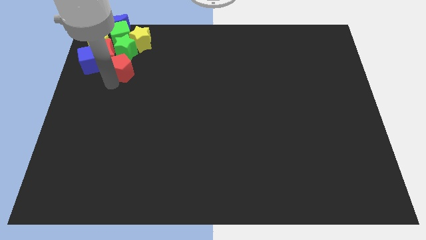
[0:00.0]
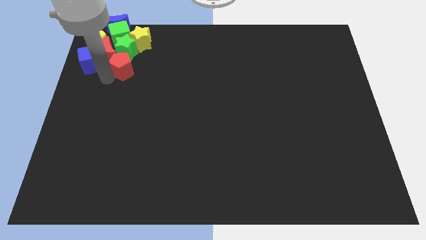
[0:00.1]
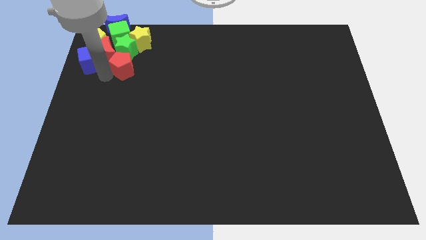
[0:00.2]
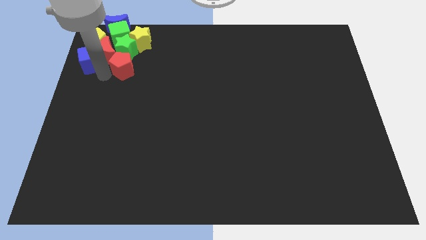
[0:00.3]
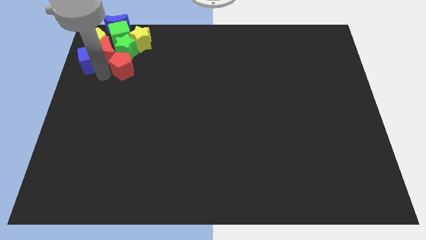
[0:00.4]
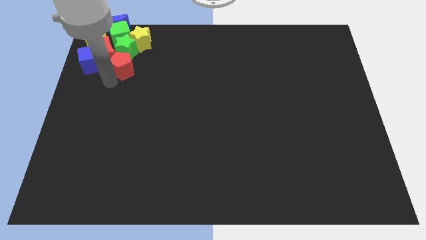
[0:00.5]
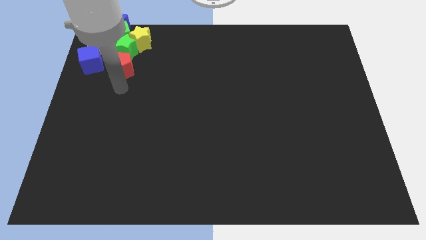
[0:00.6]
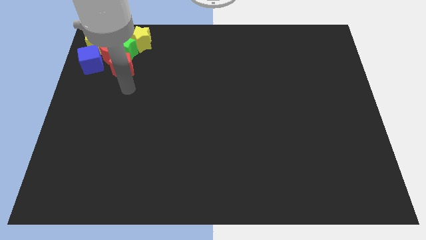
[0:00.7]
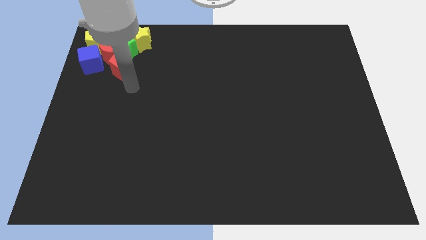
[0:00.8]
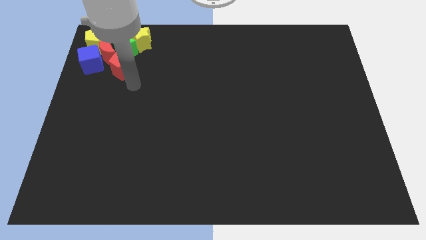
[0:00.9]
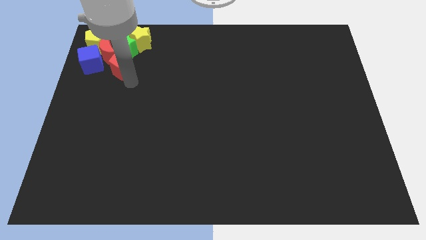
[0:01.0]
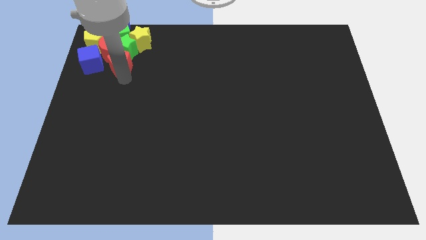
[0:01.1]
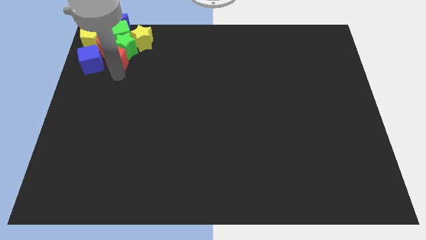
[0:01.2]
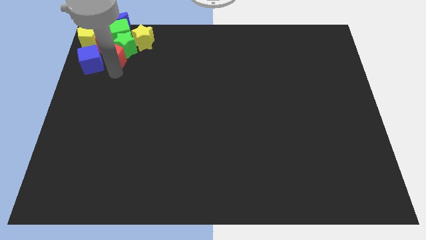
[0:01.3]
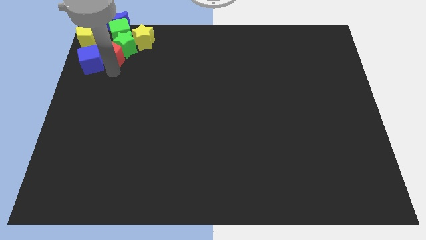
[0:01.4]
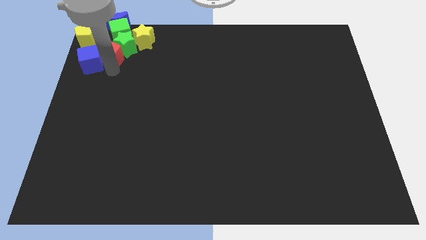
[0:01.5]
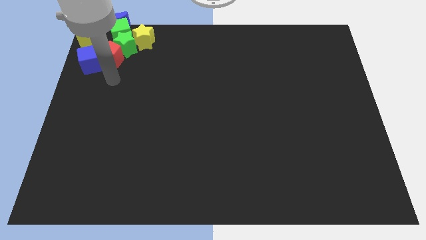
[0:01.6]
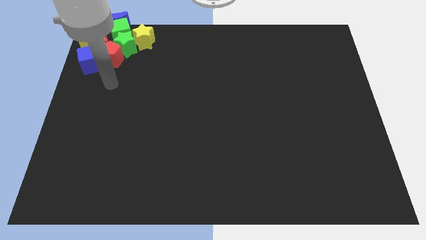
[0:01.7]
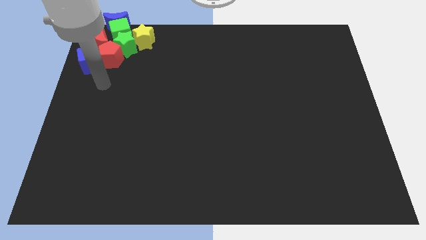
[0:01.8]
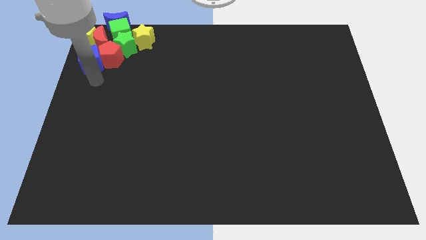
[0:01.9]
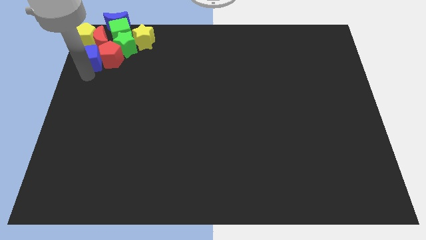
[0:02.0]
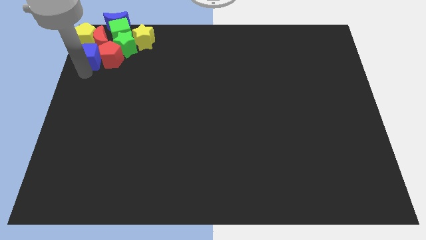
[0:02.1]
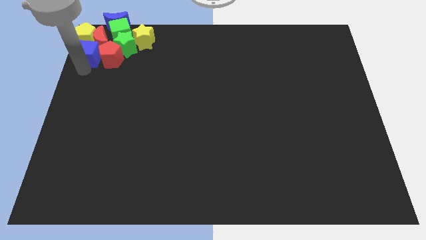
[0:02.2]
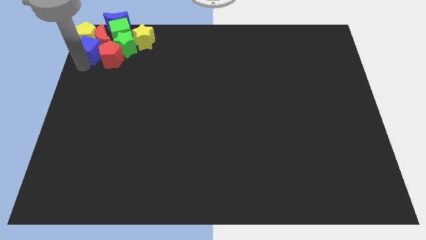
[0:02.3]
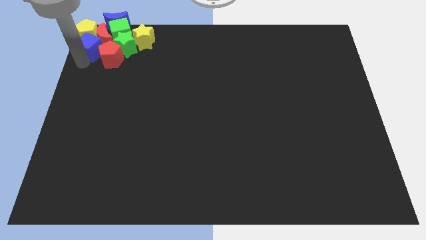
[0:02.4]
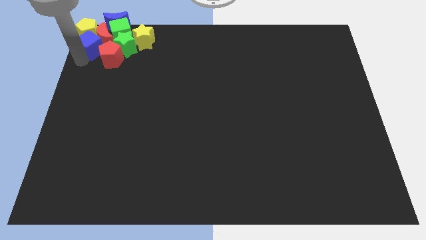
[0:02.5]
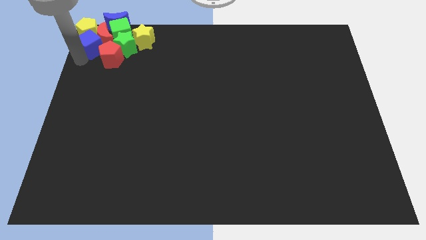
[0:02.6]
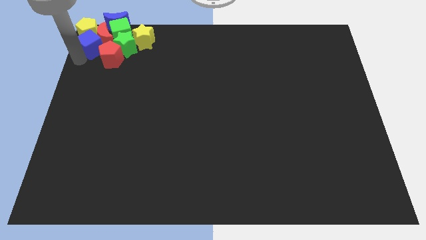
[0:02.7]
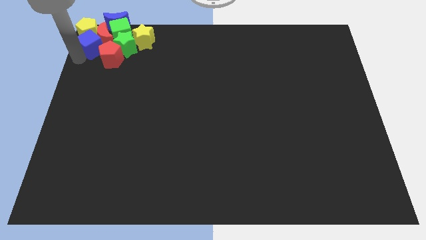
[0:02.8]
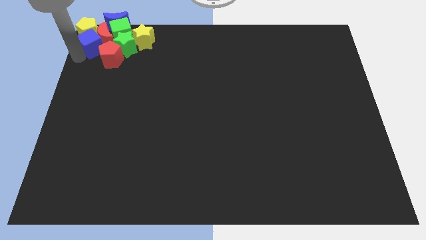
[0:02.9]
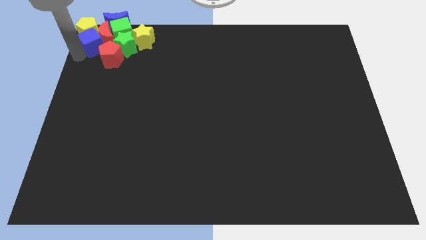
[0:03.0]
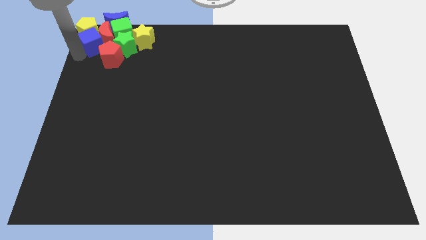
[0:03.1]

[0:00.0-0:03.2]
push the blue cube into the yellow pentagon

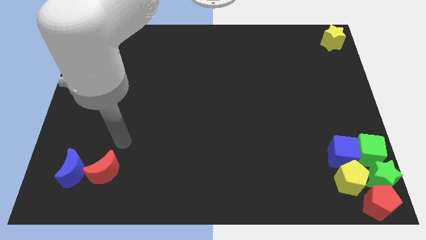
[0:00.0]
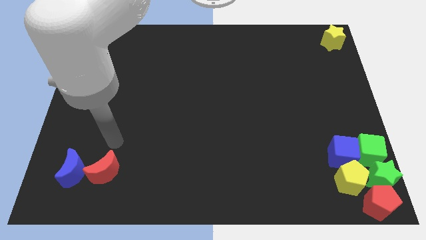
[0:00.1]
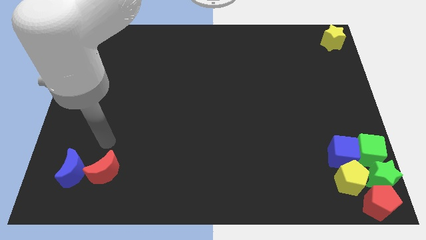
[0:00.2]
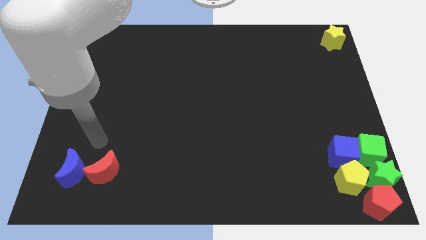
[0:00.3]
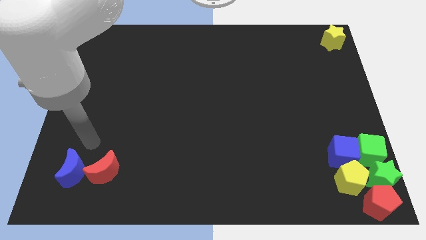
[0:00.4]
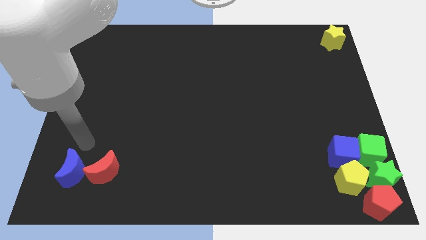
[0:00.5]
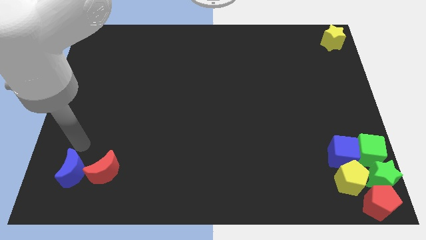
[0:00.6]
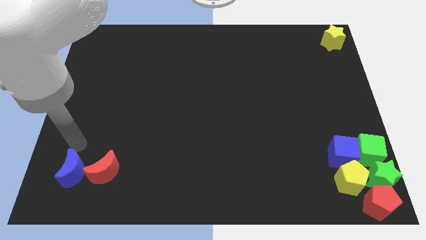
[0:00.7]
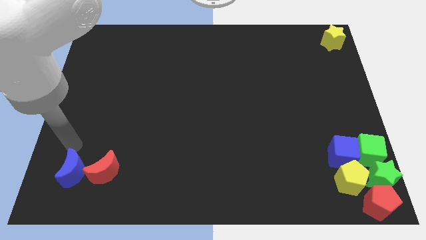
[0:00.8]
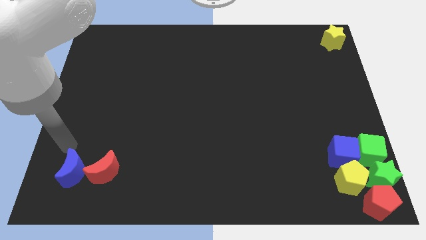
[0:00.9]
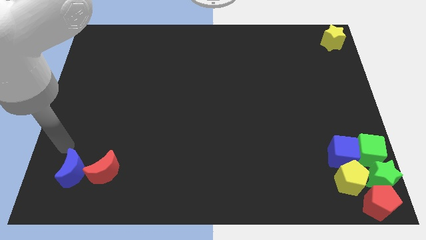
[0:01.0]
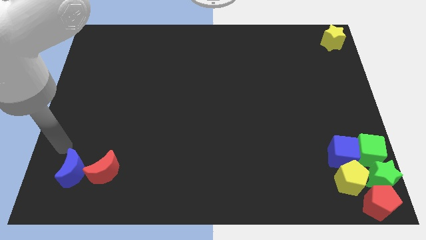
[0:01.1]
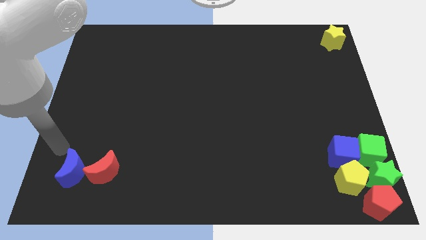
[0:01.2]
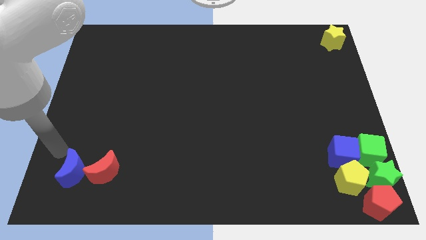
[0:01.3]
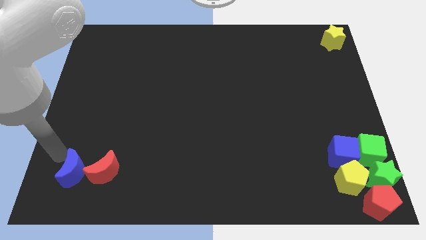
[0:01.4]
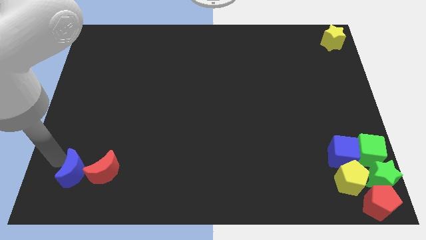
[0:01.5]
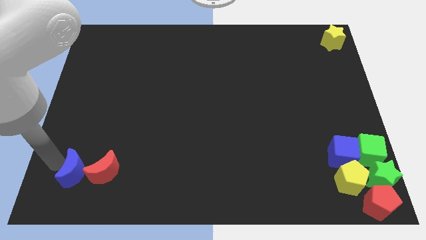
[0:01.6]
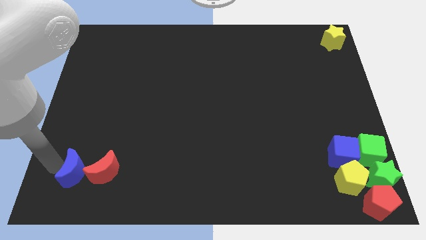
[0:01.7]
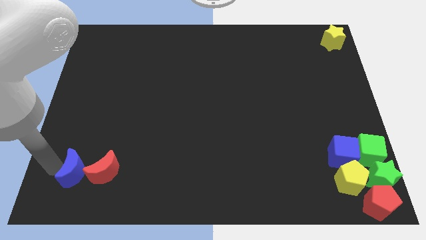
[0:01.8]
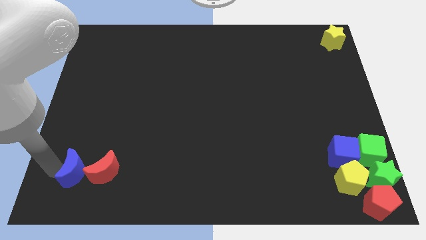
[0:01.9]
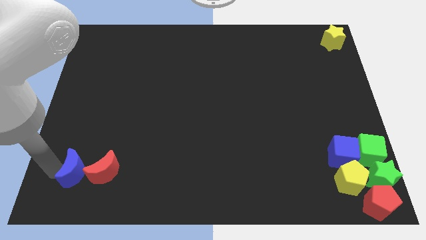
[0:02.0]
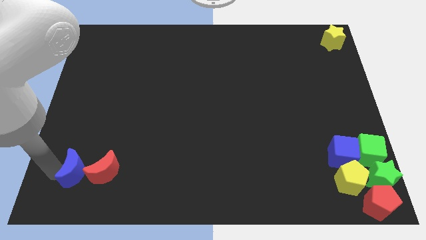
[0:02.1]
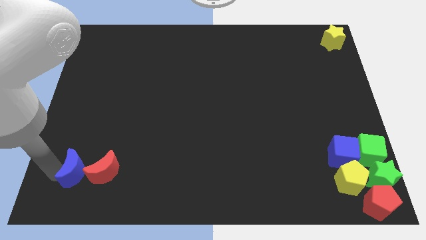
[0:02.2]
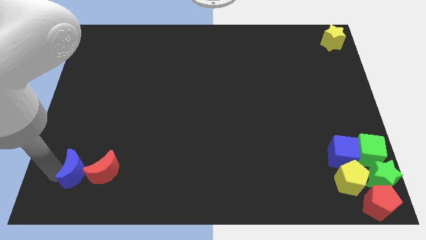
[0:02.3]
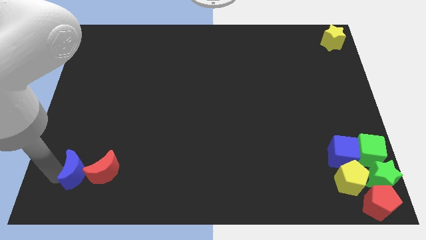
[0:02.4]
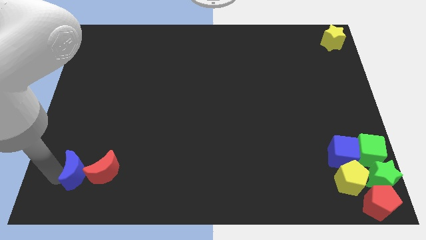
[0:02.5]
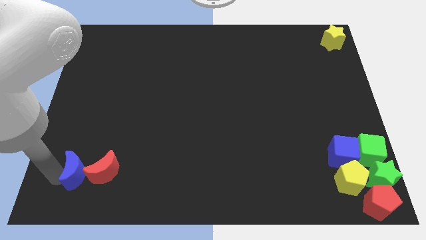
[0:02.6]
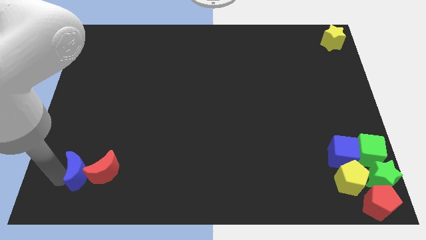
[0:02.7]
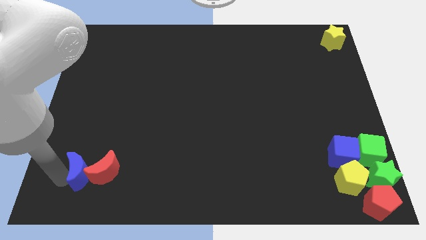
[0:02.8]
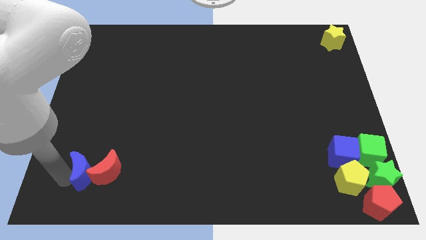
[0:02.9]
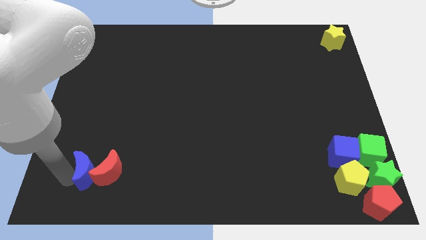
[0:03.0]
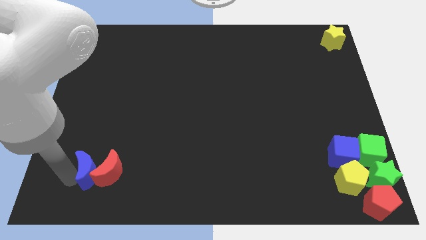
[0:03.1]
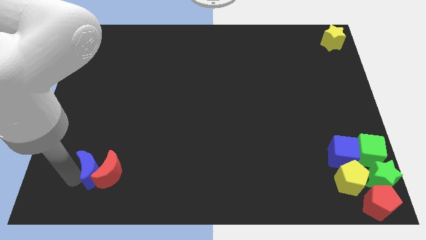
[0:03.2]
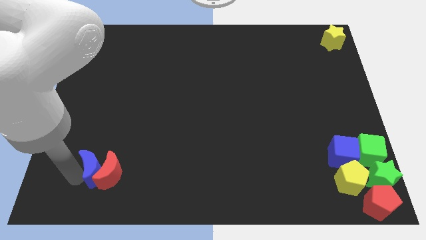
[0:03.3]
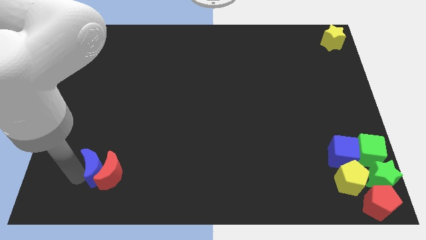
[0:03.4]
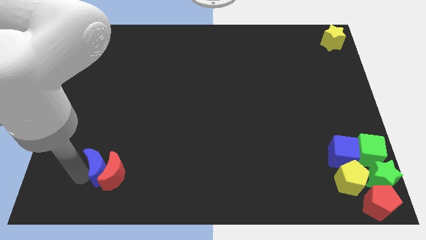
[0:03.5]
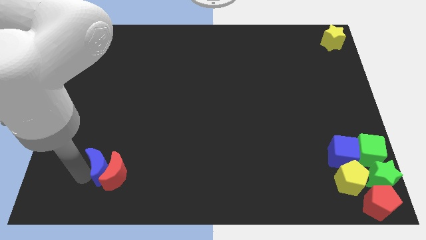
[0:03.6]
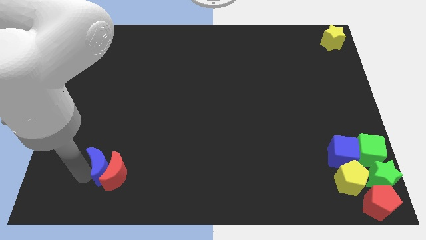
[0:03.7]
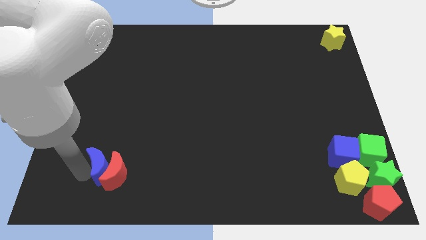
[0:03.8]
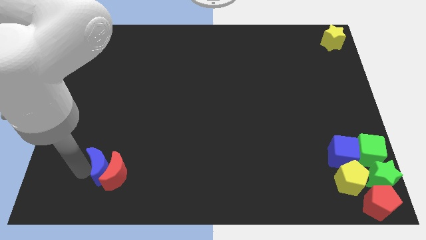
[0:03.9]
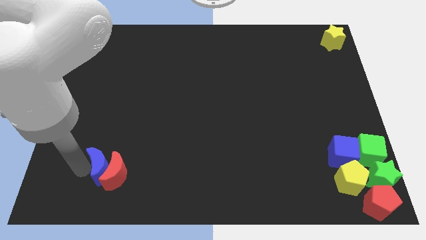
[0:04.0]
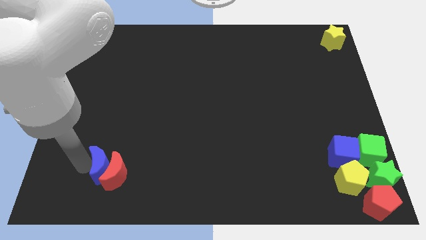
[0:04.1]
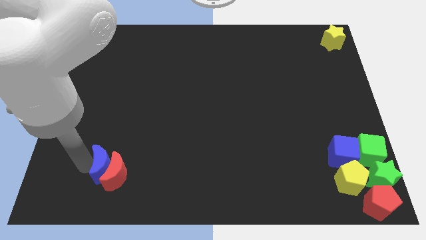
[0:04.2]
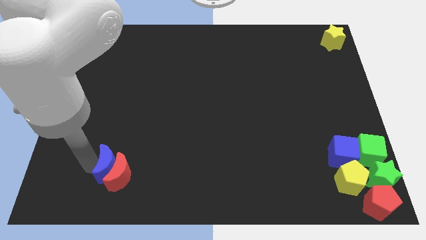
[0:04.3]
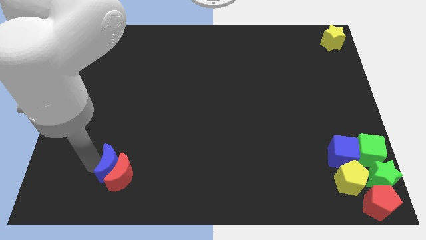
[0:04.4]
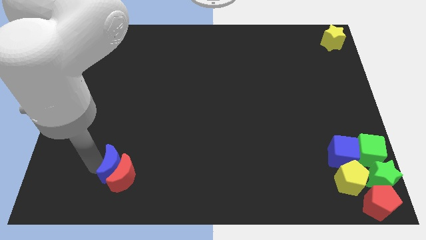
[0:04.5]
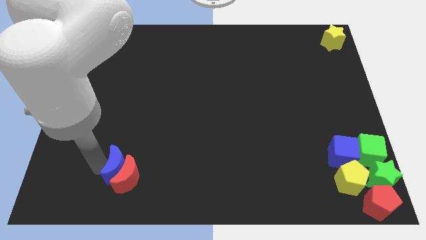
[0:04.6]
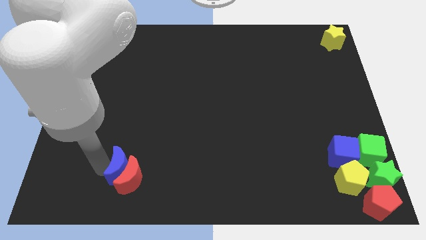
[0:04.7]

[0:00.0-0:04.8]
push the blue moon into red moon to the left

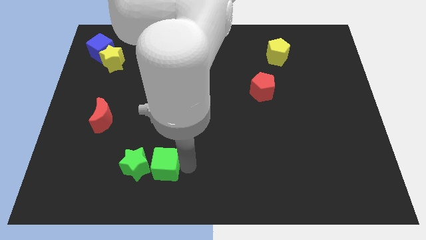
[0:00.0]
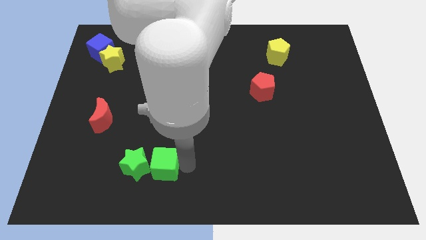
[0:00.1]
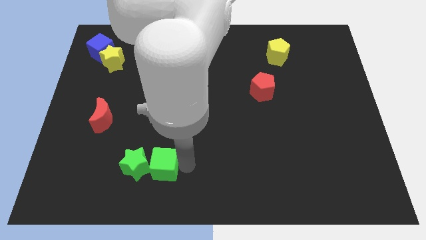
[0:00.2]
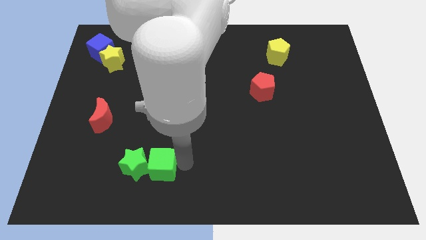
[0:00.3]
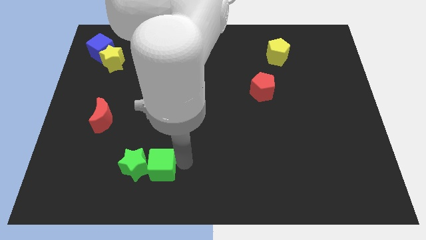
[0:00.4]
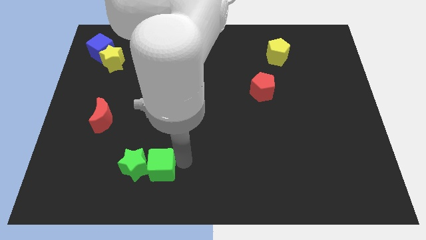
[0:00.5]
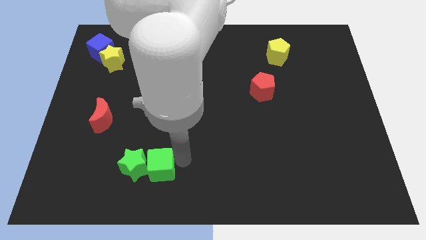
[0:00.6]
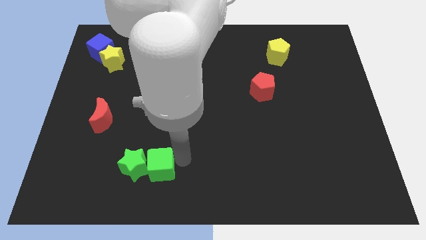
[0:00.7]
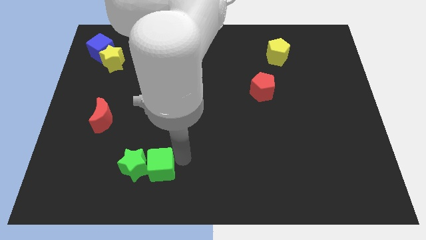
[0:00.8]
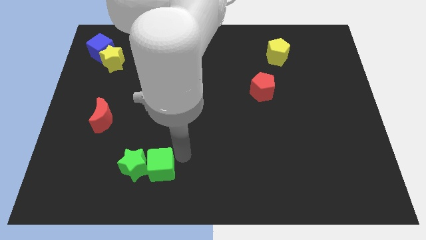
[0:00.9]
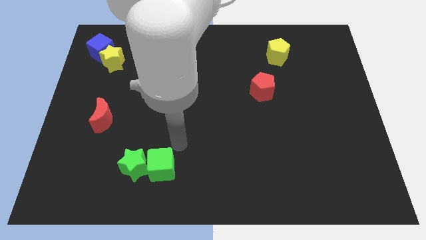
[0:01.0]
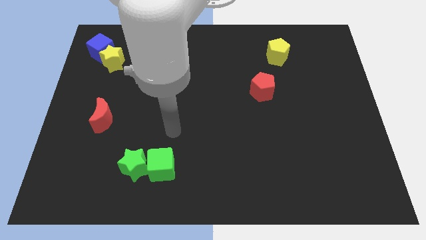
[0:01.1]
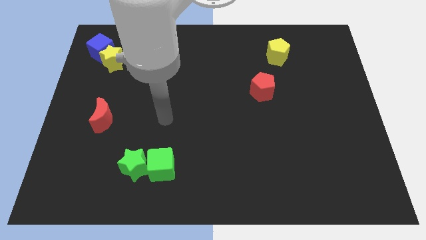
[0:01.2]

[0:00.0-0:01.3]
push green cube into the green star
